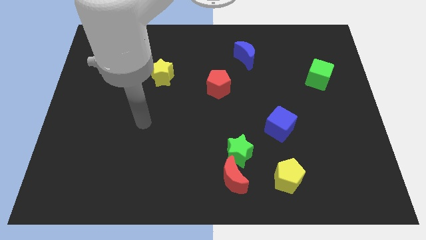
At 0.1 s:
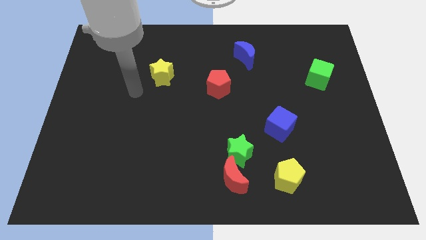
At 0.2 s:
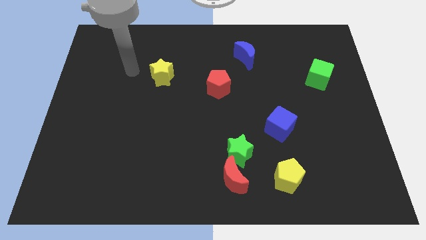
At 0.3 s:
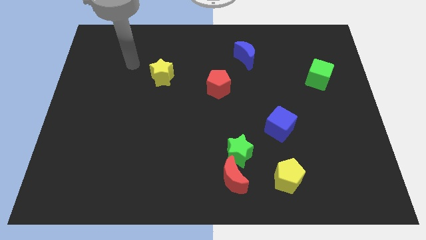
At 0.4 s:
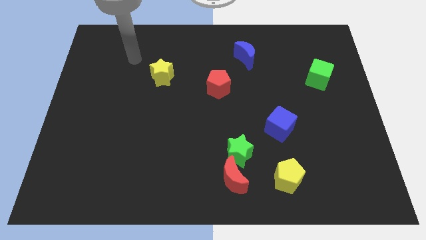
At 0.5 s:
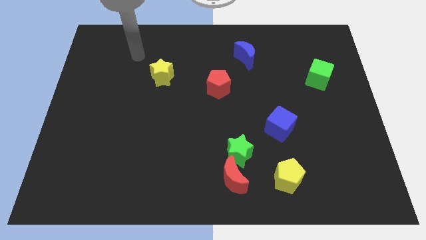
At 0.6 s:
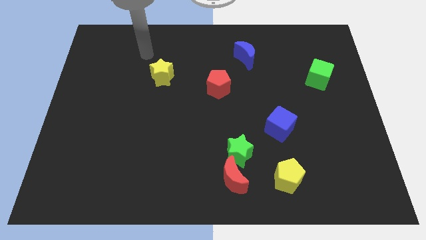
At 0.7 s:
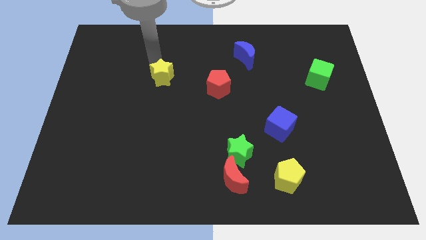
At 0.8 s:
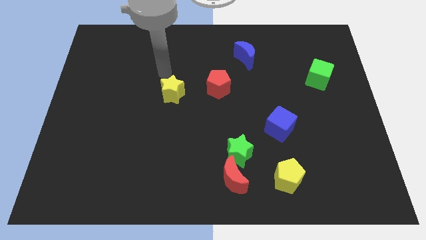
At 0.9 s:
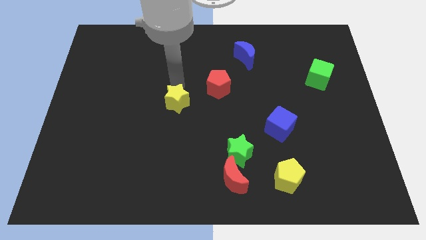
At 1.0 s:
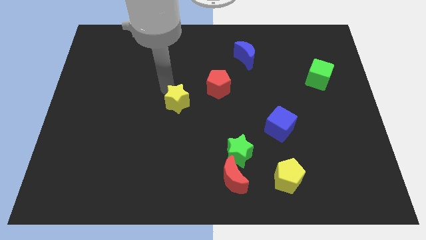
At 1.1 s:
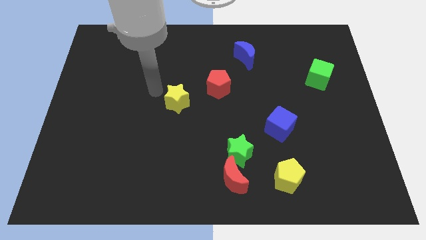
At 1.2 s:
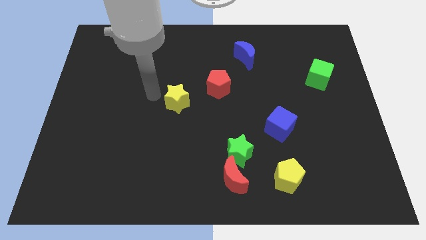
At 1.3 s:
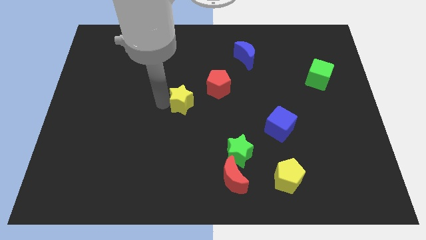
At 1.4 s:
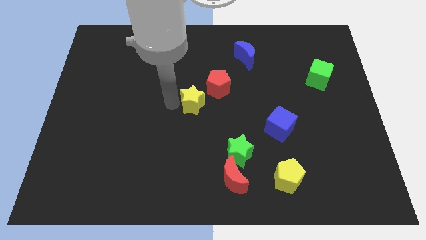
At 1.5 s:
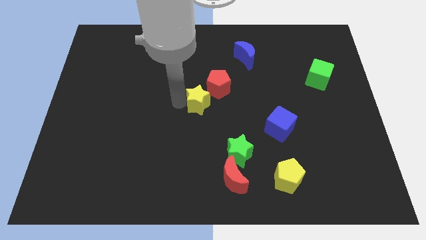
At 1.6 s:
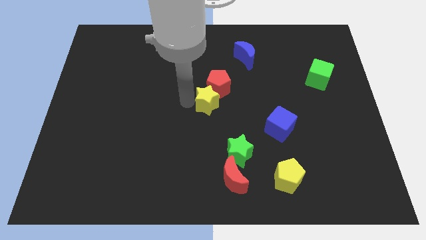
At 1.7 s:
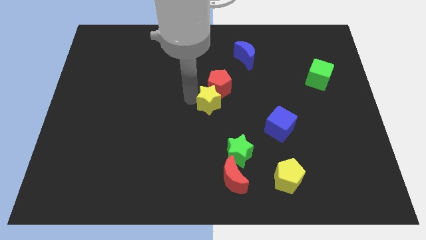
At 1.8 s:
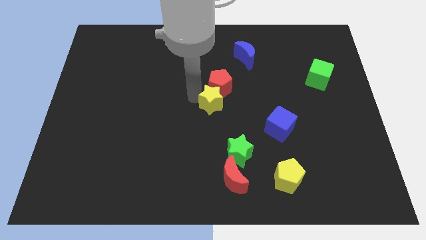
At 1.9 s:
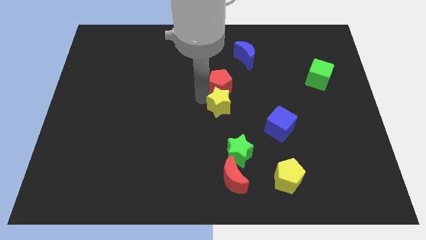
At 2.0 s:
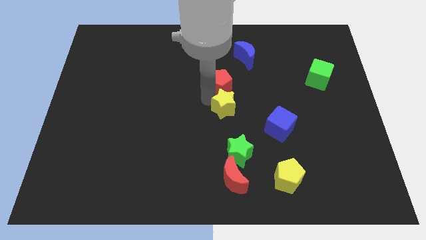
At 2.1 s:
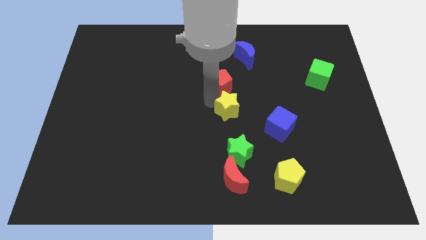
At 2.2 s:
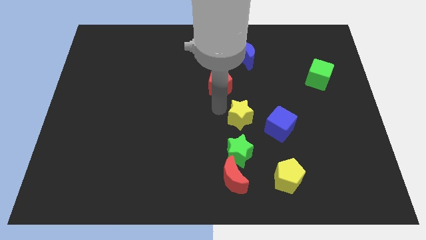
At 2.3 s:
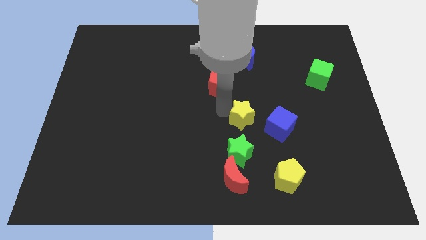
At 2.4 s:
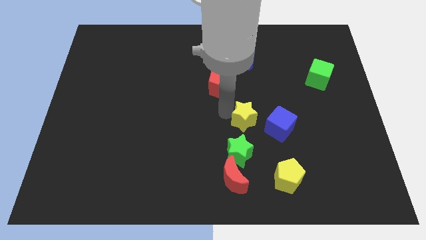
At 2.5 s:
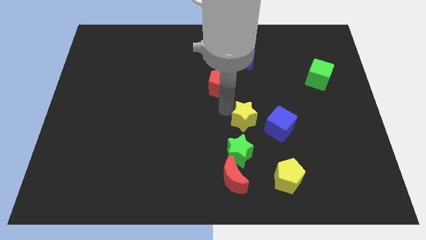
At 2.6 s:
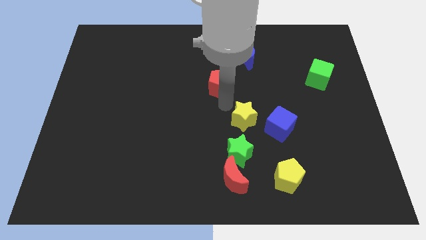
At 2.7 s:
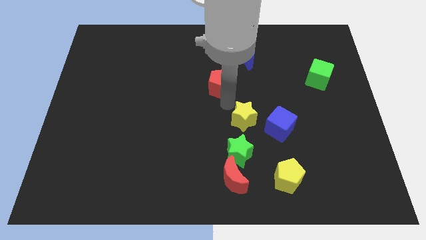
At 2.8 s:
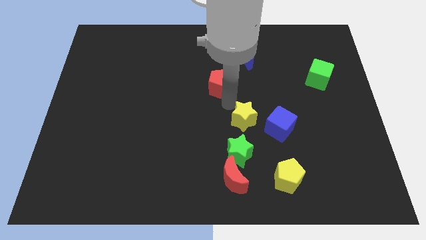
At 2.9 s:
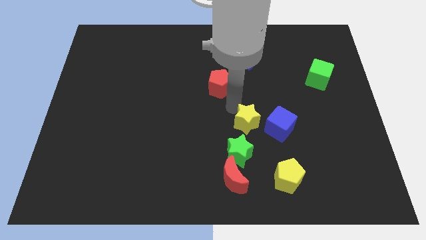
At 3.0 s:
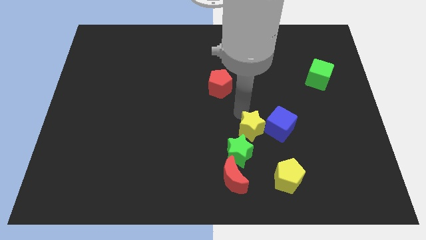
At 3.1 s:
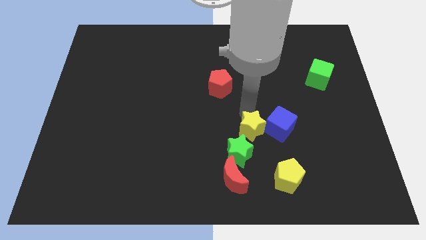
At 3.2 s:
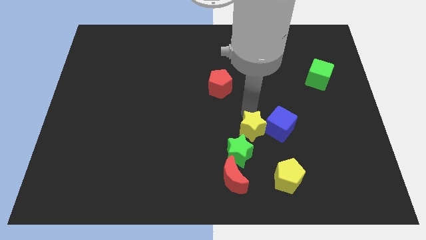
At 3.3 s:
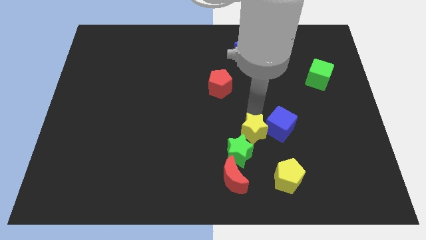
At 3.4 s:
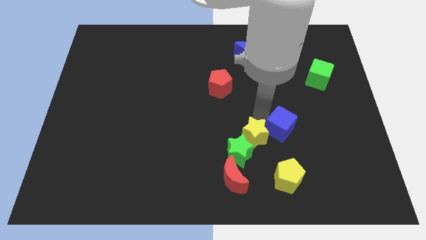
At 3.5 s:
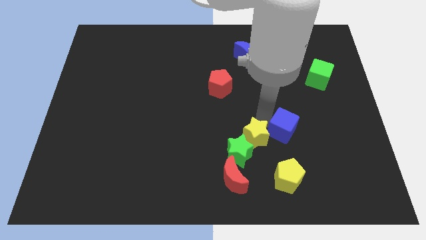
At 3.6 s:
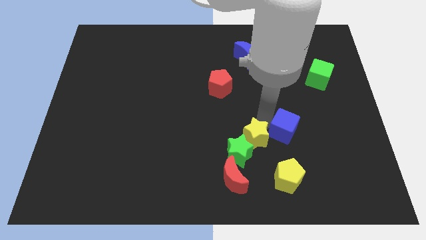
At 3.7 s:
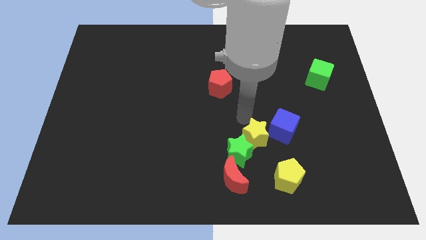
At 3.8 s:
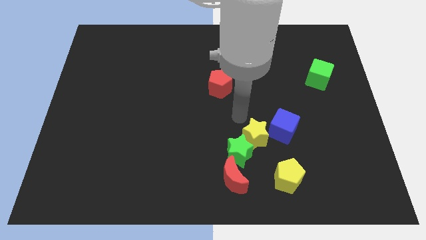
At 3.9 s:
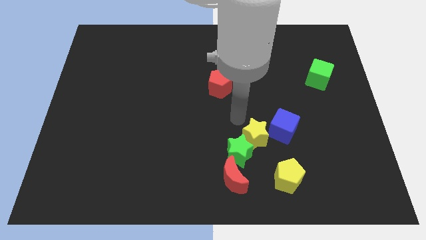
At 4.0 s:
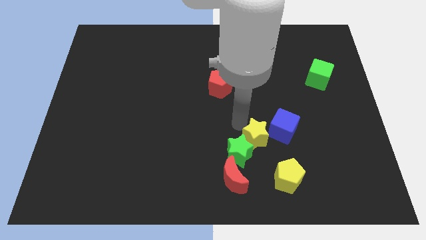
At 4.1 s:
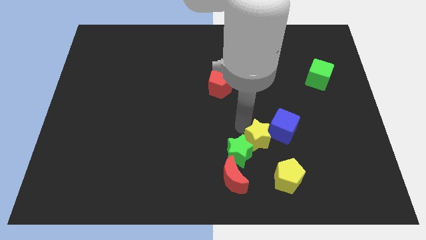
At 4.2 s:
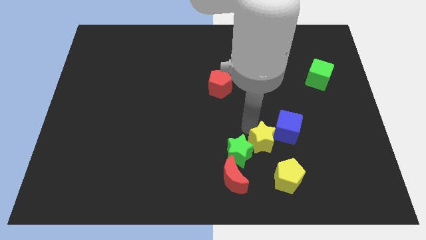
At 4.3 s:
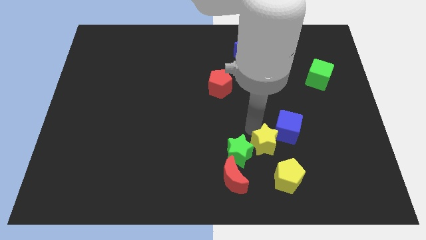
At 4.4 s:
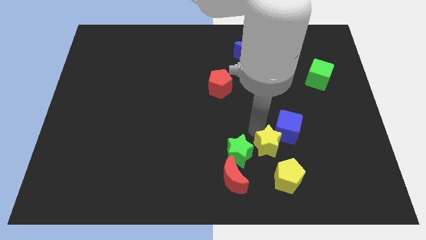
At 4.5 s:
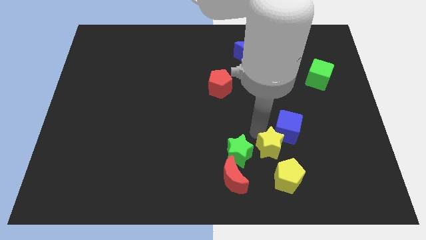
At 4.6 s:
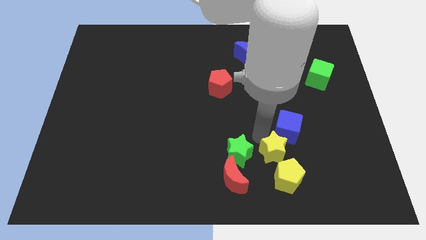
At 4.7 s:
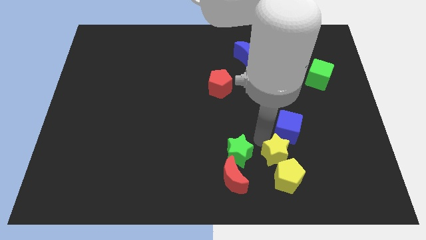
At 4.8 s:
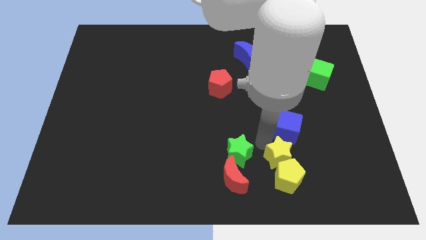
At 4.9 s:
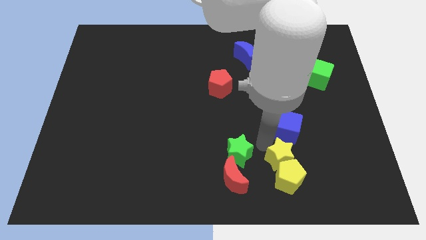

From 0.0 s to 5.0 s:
put the yellow star next to the yellow pentagon

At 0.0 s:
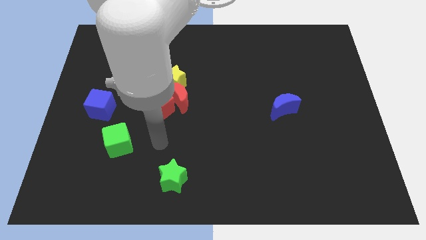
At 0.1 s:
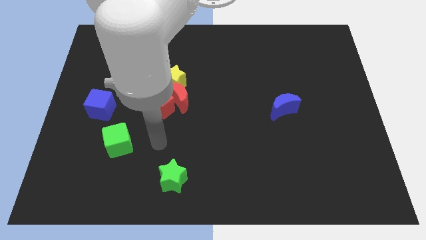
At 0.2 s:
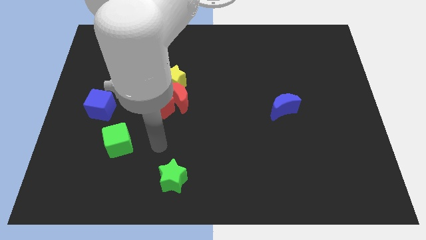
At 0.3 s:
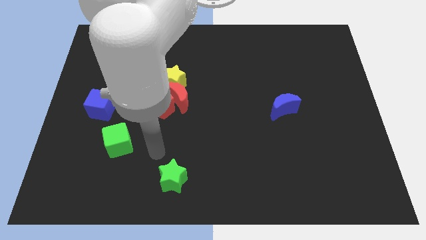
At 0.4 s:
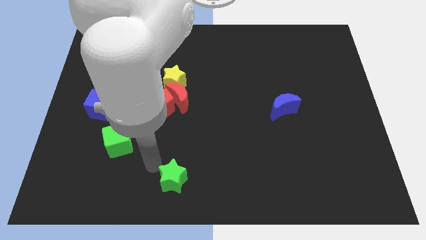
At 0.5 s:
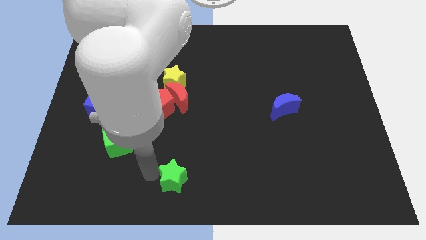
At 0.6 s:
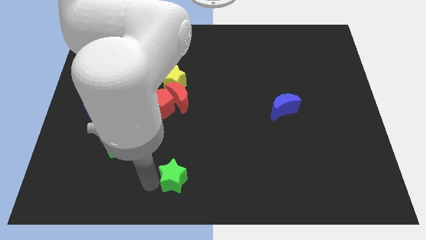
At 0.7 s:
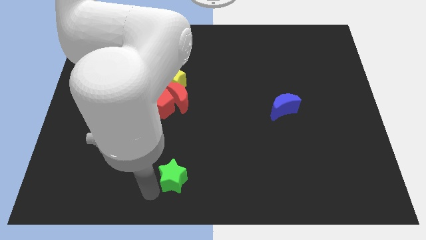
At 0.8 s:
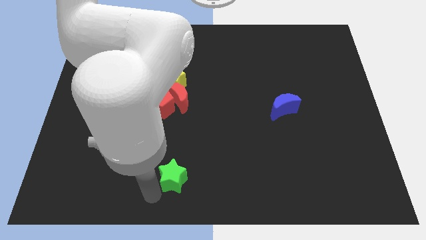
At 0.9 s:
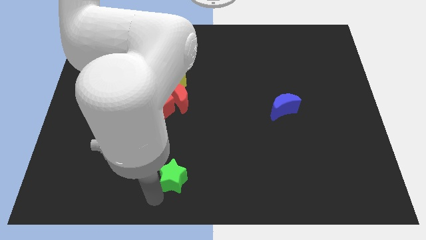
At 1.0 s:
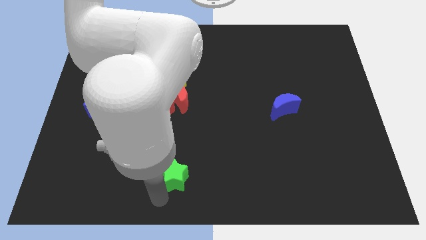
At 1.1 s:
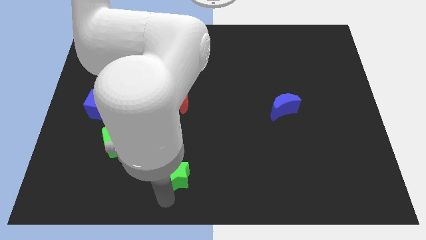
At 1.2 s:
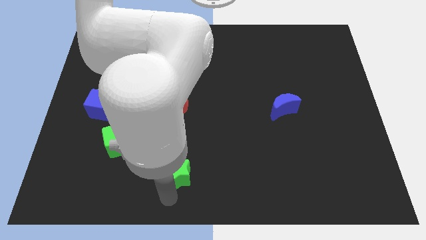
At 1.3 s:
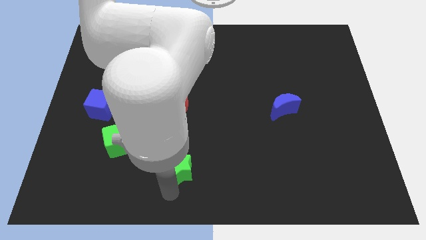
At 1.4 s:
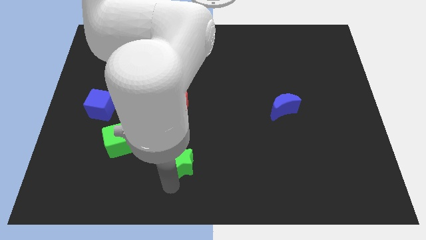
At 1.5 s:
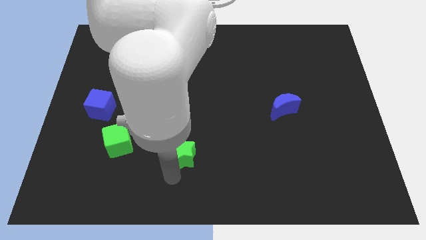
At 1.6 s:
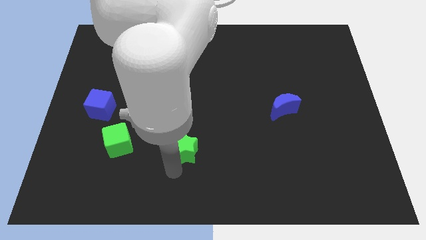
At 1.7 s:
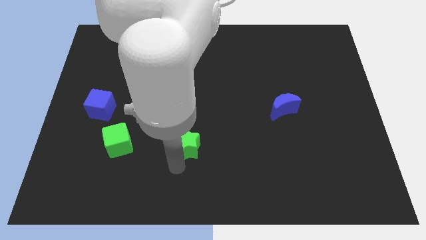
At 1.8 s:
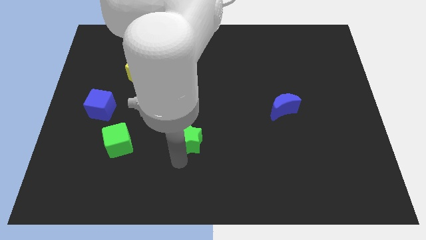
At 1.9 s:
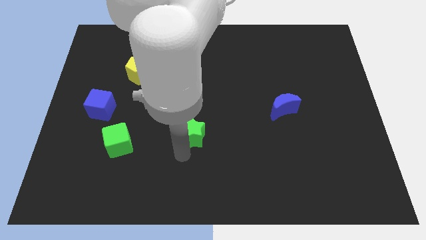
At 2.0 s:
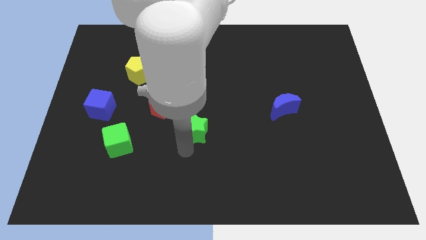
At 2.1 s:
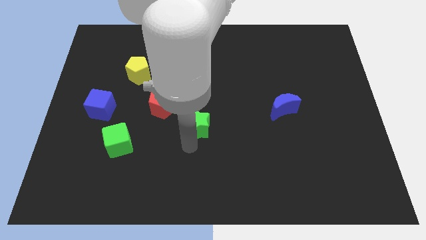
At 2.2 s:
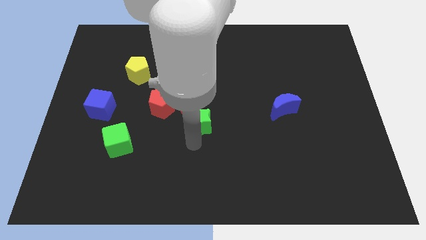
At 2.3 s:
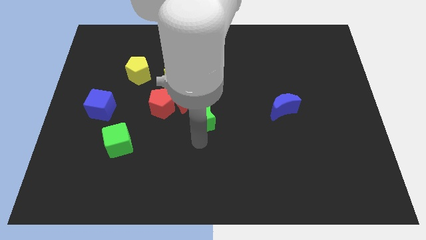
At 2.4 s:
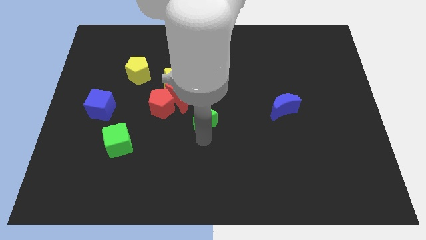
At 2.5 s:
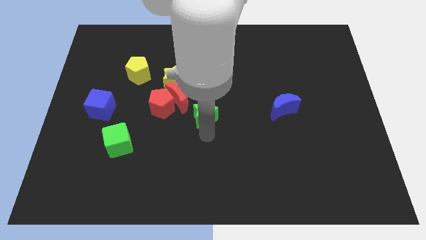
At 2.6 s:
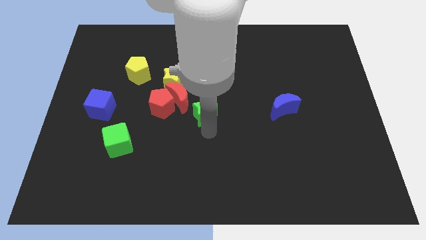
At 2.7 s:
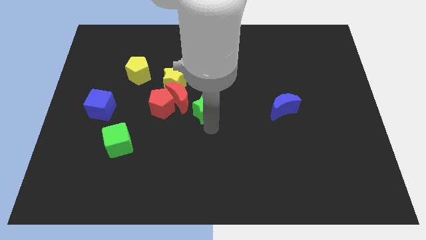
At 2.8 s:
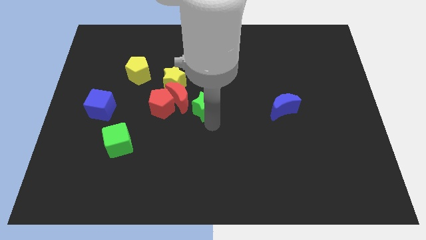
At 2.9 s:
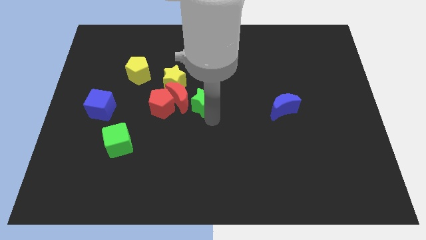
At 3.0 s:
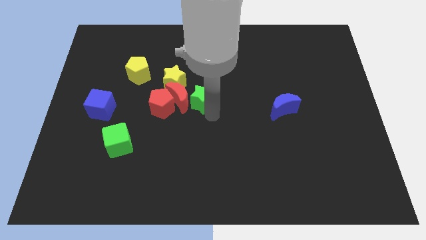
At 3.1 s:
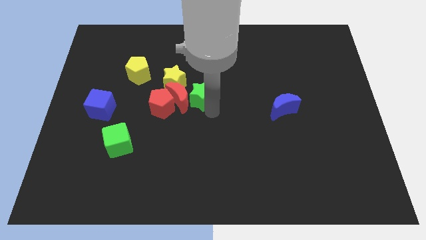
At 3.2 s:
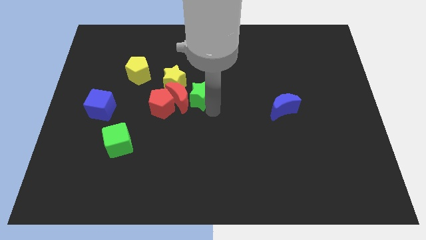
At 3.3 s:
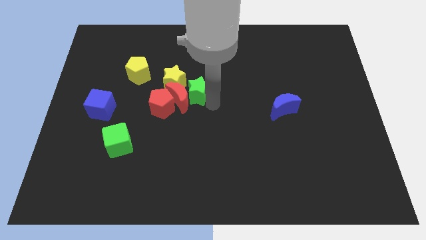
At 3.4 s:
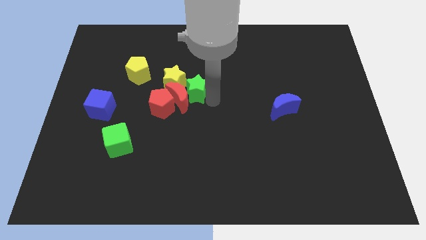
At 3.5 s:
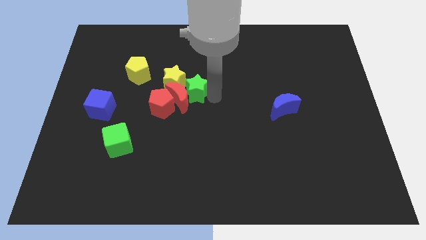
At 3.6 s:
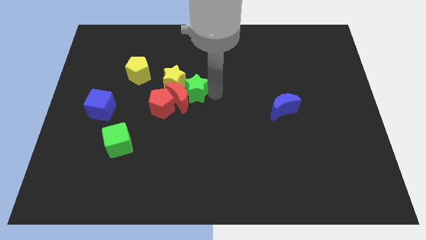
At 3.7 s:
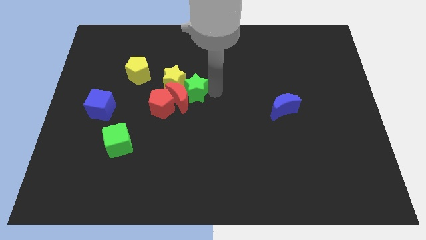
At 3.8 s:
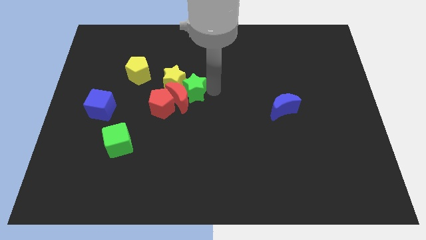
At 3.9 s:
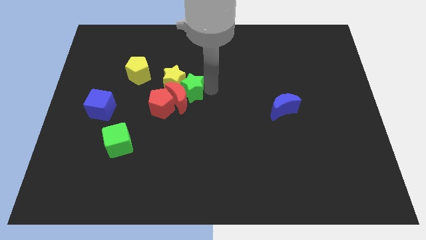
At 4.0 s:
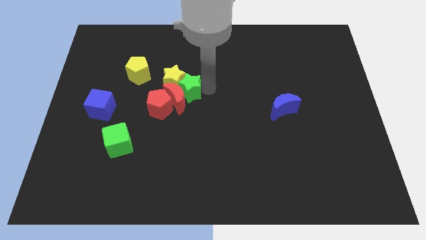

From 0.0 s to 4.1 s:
move the green star towards the yellow star
